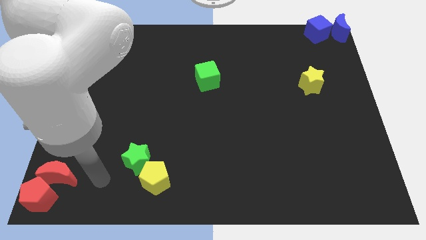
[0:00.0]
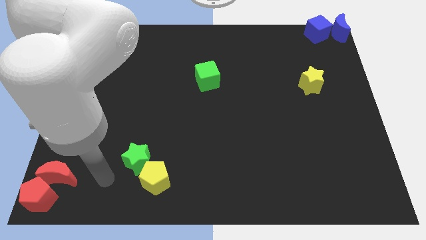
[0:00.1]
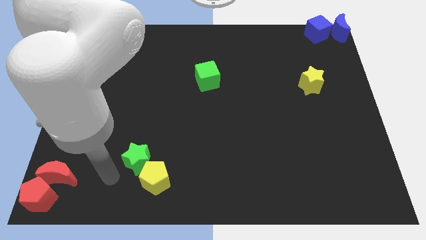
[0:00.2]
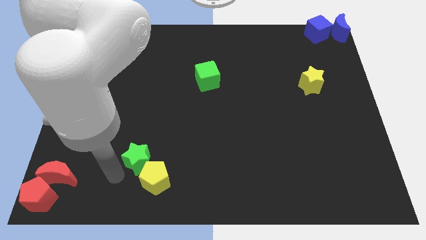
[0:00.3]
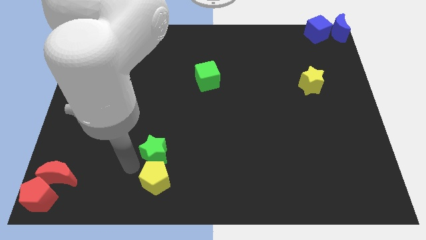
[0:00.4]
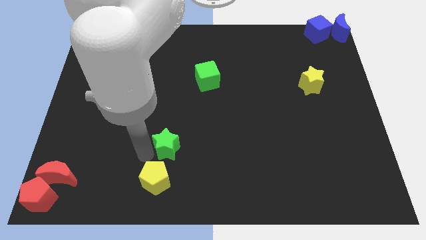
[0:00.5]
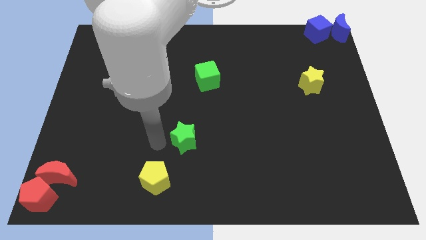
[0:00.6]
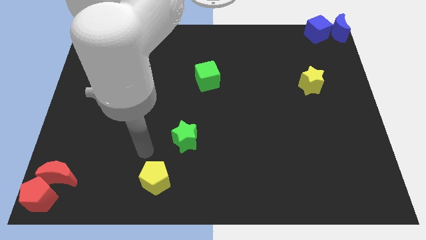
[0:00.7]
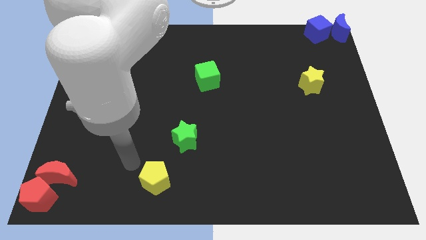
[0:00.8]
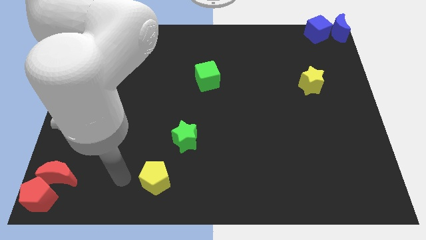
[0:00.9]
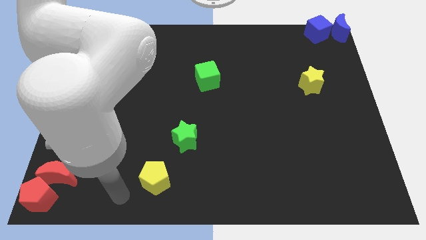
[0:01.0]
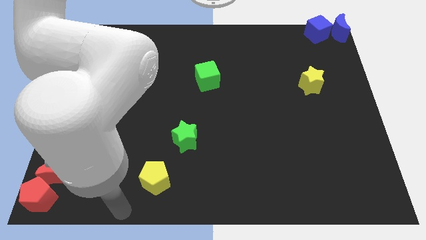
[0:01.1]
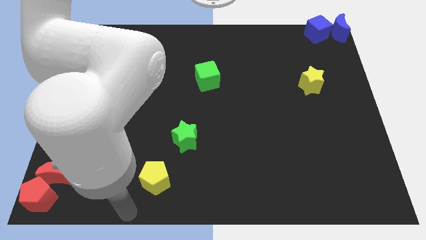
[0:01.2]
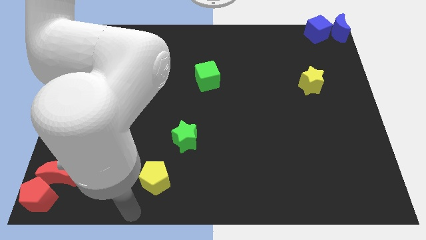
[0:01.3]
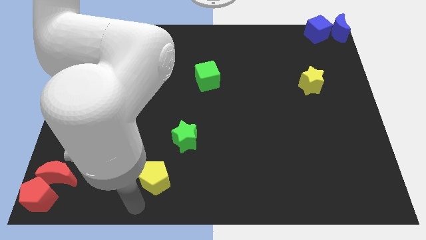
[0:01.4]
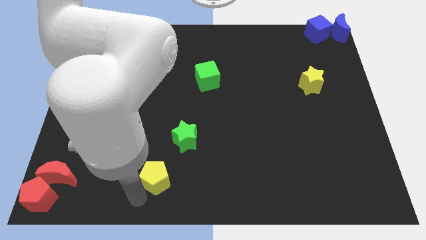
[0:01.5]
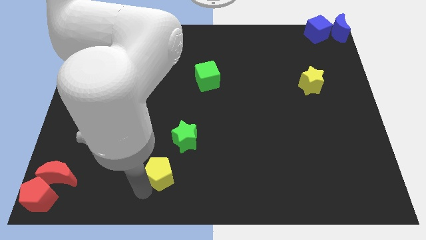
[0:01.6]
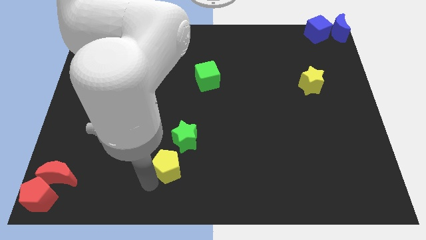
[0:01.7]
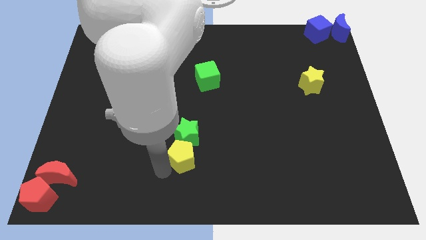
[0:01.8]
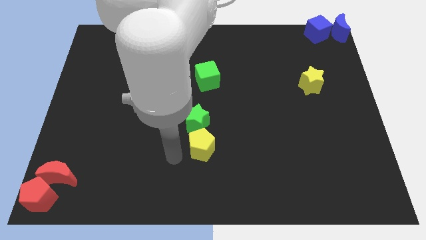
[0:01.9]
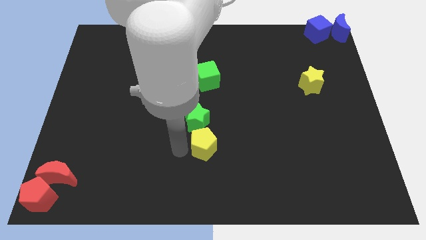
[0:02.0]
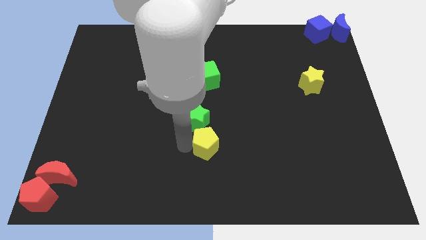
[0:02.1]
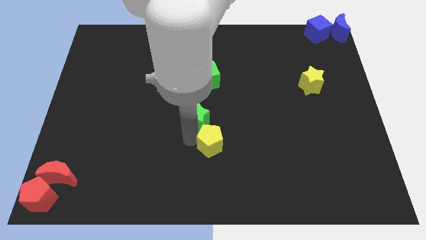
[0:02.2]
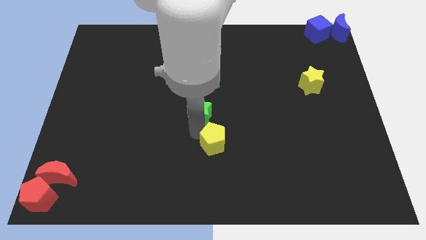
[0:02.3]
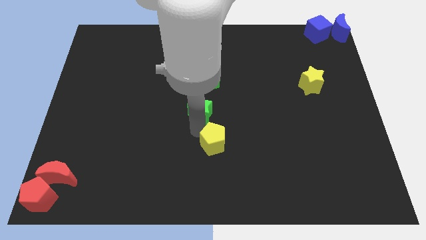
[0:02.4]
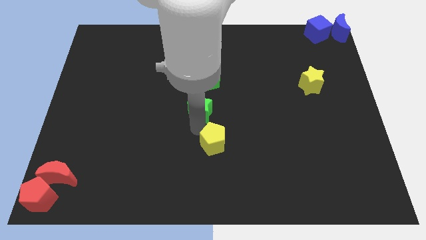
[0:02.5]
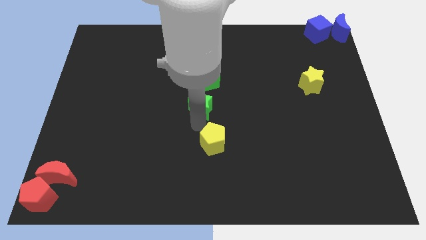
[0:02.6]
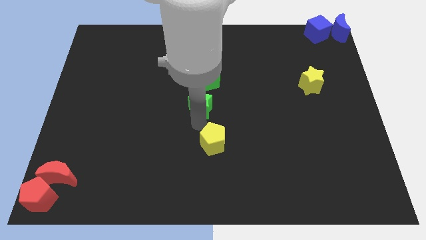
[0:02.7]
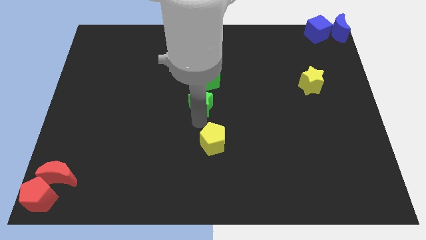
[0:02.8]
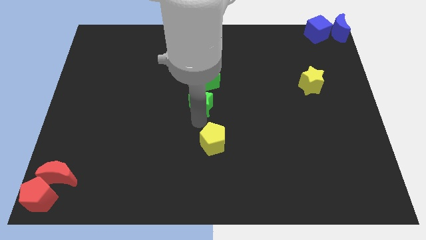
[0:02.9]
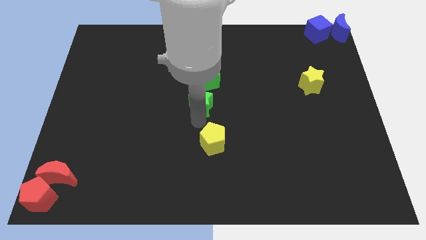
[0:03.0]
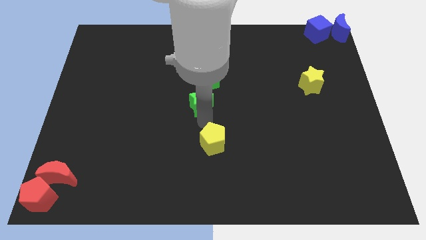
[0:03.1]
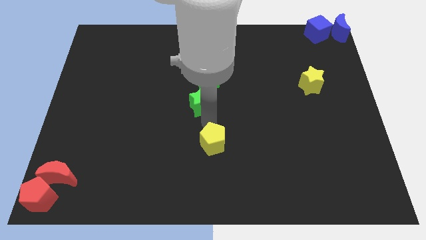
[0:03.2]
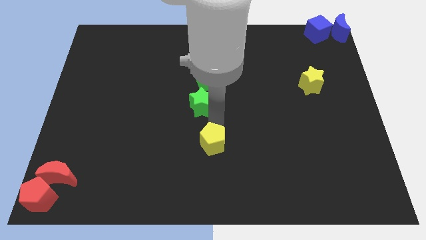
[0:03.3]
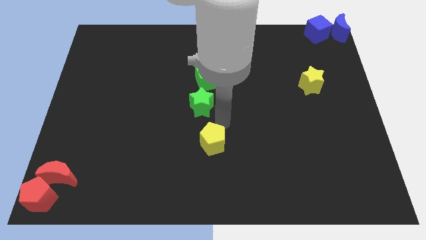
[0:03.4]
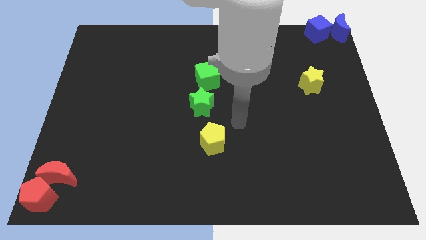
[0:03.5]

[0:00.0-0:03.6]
push the green star and the yellow pentagon towards the center

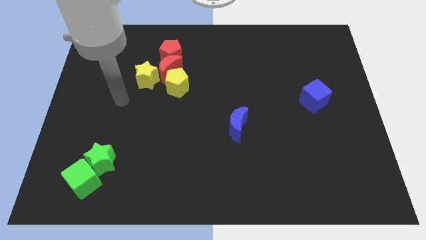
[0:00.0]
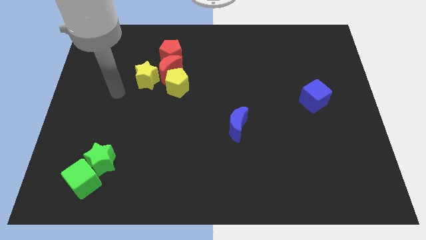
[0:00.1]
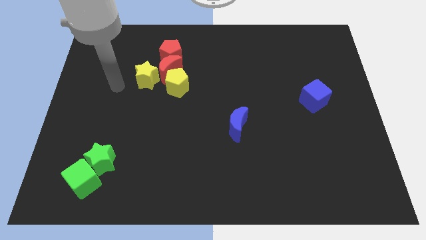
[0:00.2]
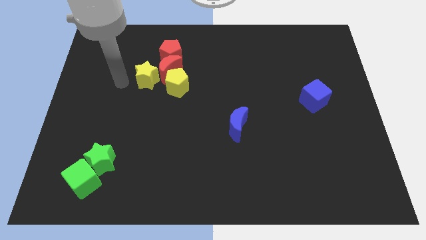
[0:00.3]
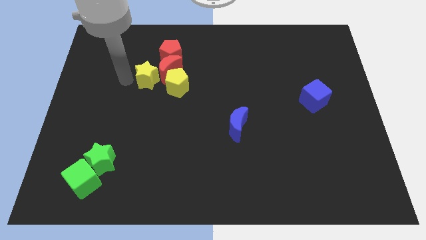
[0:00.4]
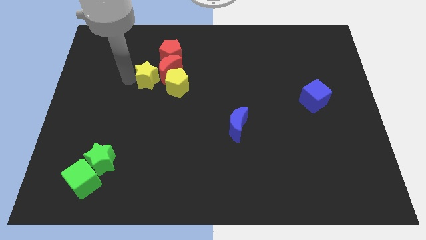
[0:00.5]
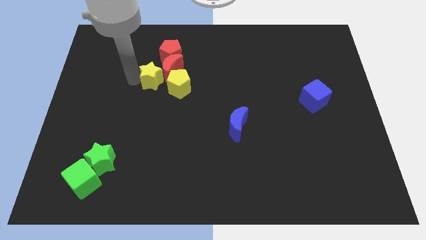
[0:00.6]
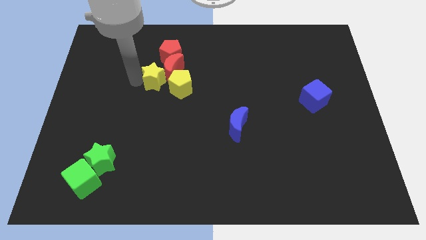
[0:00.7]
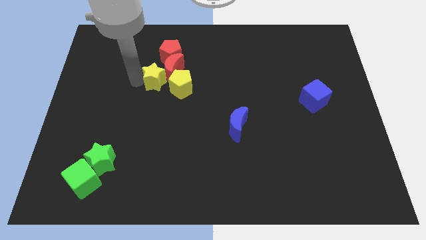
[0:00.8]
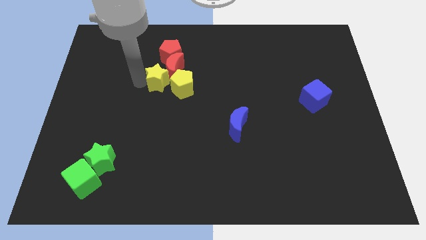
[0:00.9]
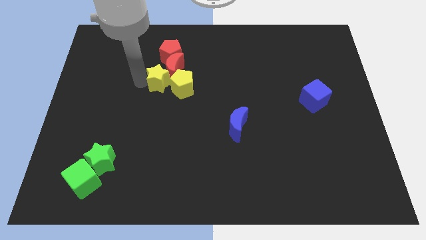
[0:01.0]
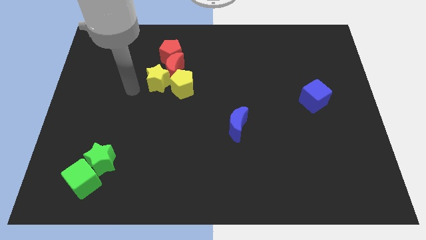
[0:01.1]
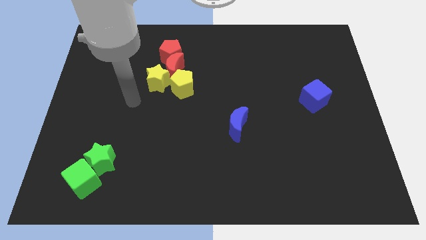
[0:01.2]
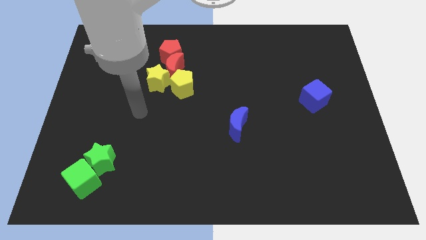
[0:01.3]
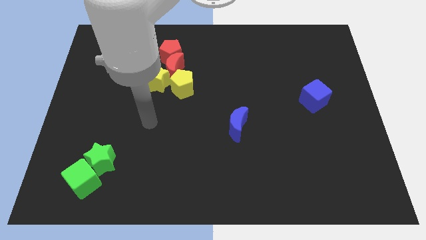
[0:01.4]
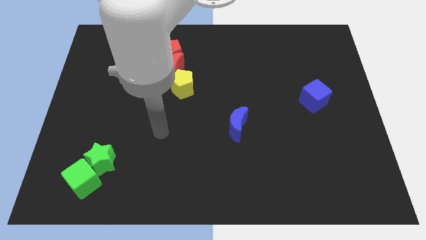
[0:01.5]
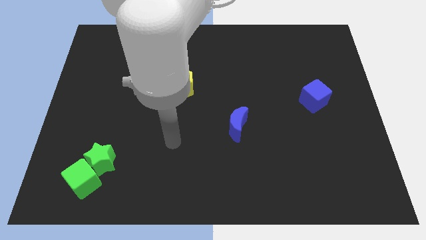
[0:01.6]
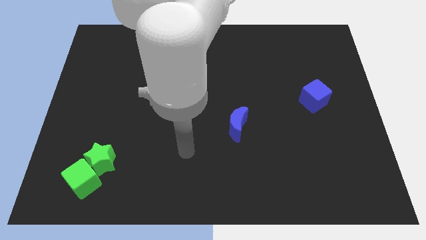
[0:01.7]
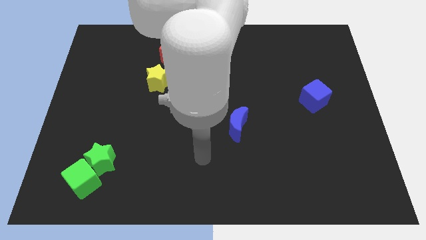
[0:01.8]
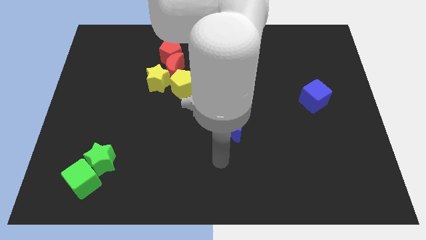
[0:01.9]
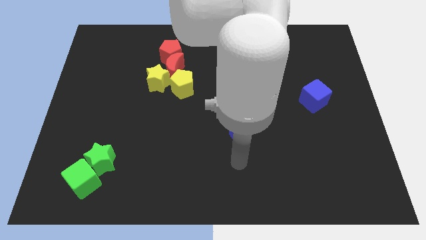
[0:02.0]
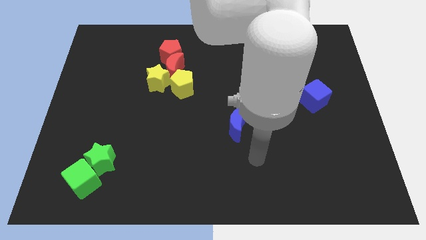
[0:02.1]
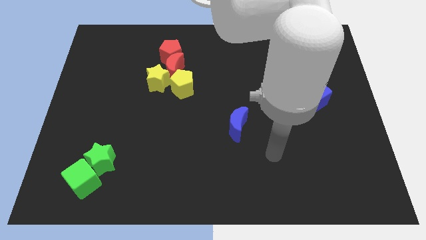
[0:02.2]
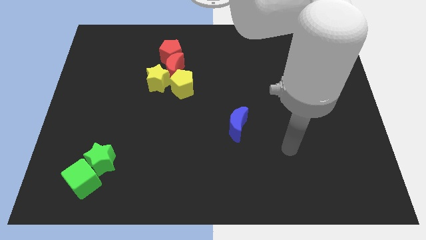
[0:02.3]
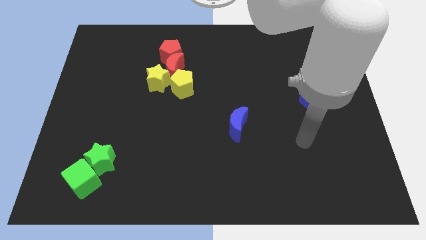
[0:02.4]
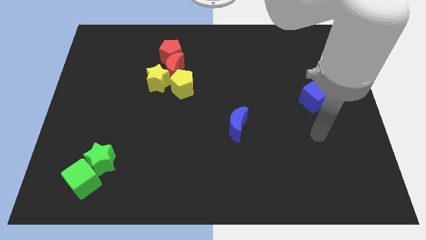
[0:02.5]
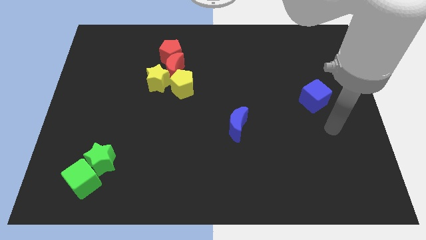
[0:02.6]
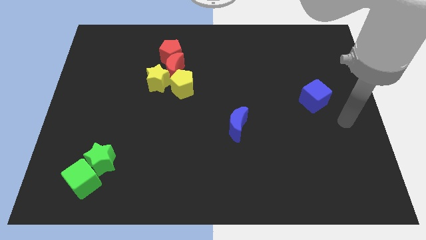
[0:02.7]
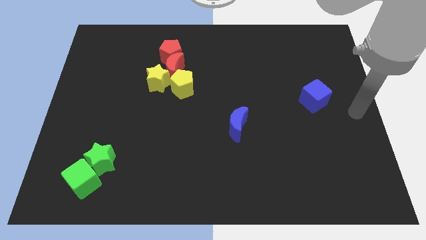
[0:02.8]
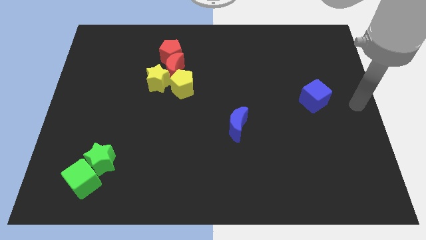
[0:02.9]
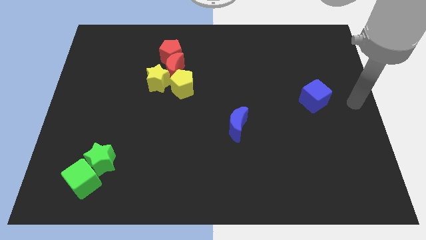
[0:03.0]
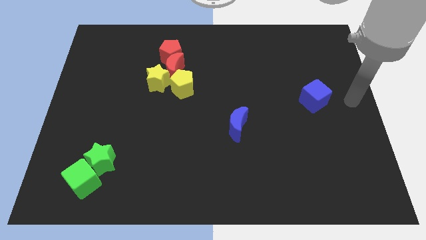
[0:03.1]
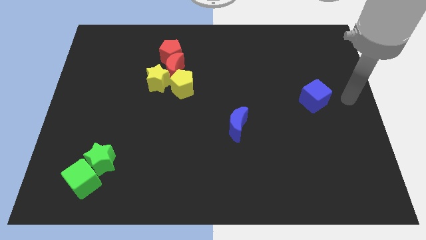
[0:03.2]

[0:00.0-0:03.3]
move arm near blue cube

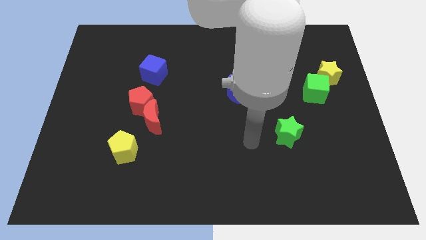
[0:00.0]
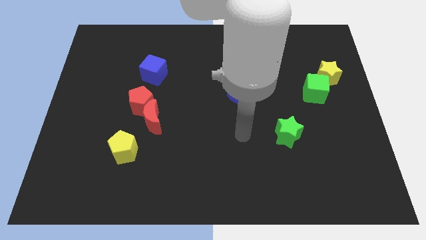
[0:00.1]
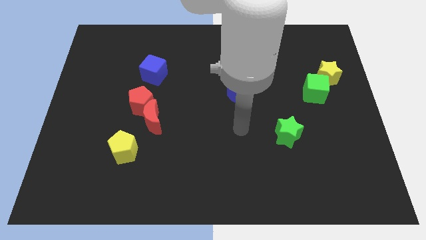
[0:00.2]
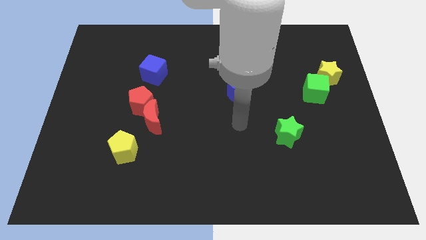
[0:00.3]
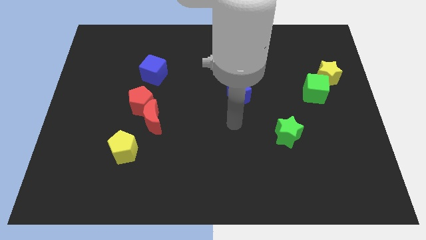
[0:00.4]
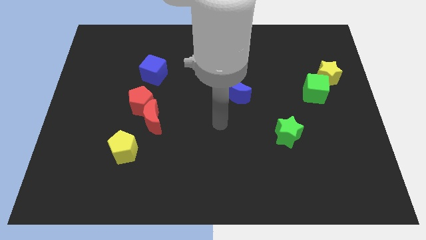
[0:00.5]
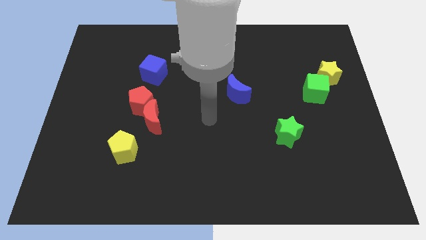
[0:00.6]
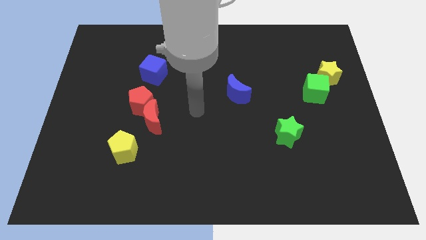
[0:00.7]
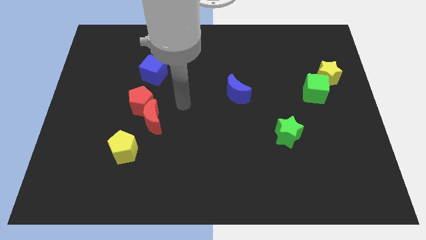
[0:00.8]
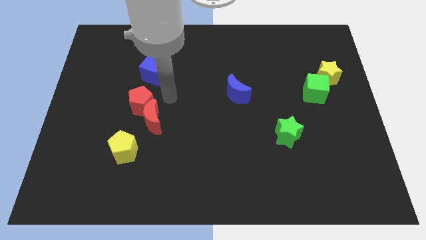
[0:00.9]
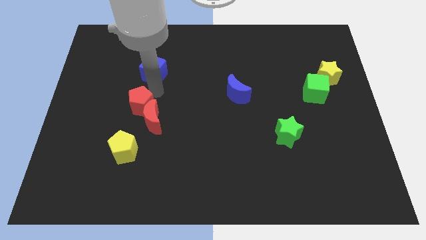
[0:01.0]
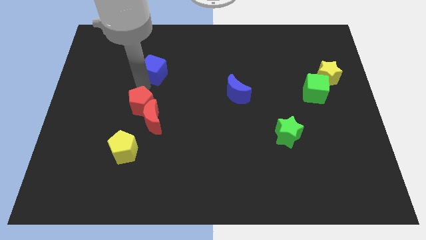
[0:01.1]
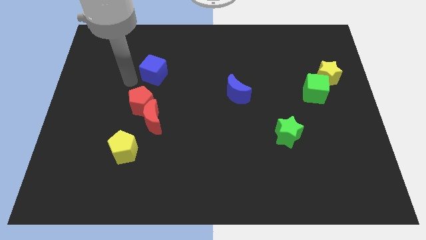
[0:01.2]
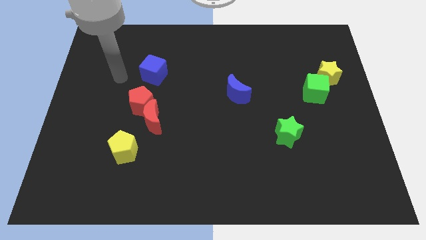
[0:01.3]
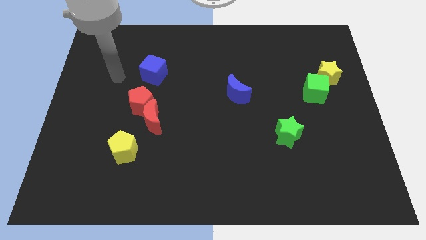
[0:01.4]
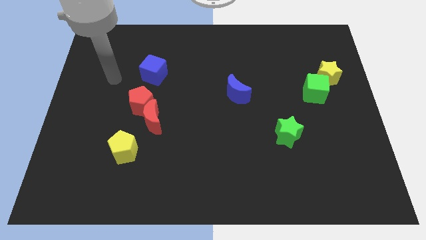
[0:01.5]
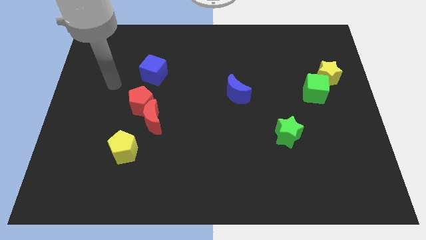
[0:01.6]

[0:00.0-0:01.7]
move your arm near the red pentagon

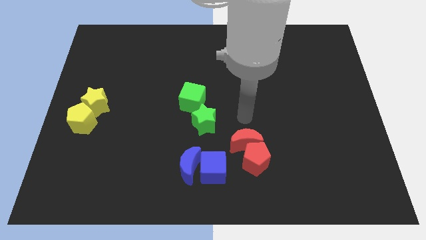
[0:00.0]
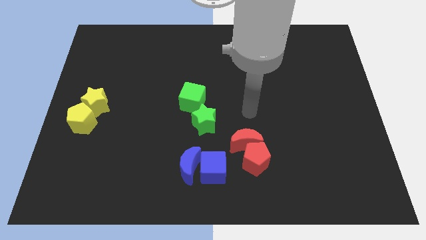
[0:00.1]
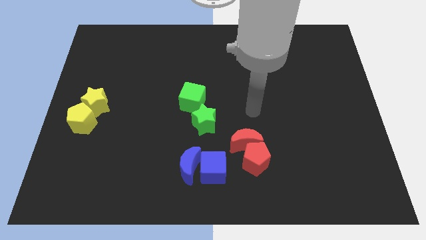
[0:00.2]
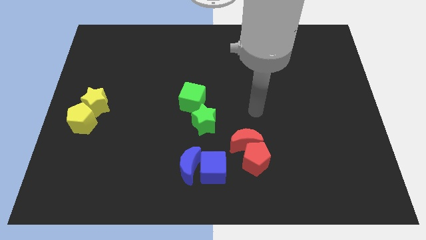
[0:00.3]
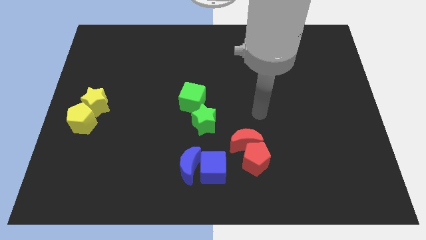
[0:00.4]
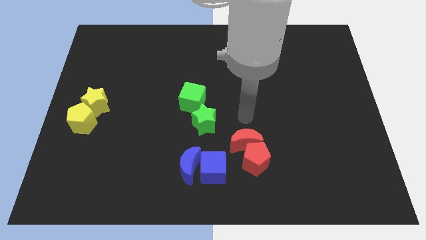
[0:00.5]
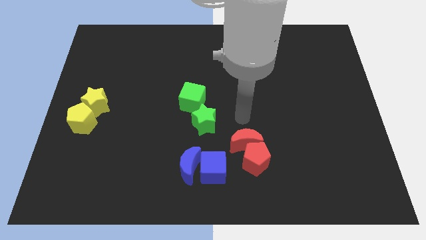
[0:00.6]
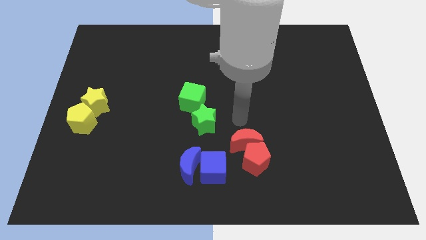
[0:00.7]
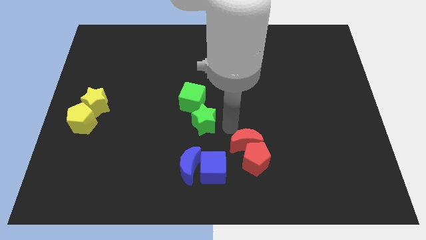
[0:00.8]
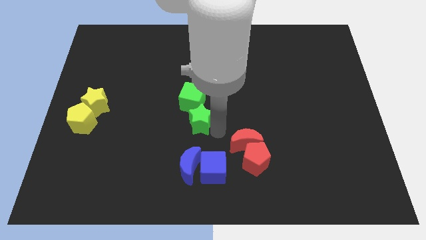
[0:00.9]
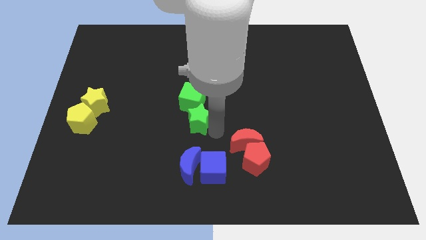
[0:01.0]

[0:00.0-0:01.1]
move green star slightly to the left
